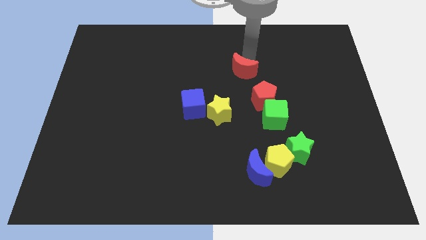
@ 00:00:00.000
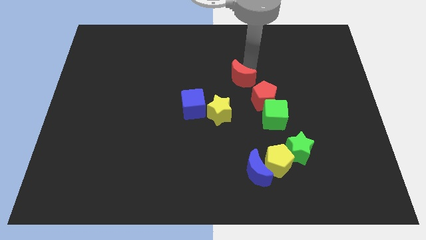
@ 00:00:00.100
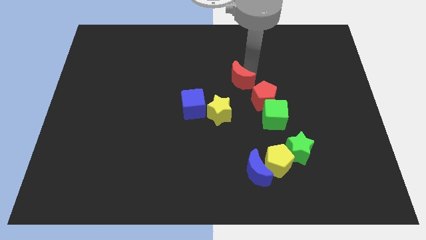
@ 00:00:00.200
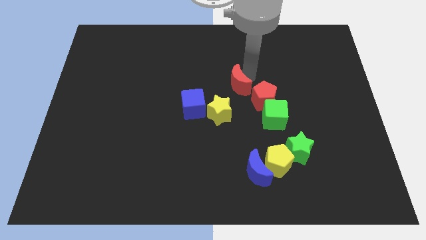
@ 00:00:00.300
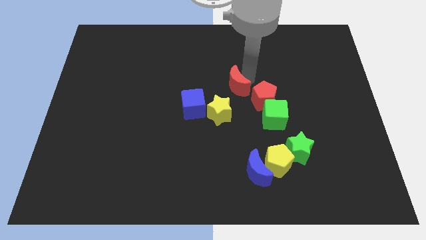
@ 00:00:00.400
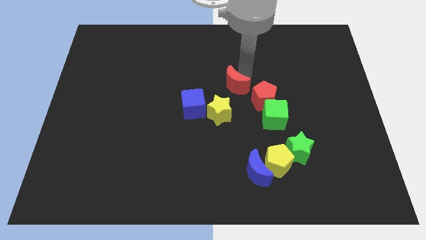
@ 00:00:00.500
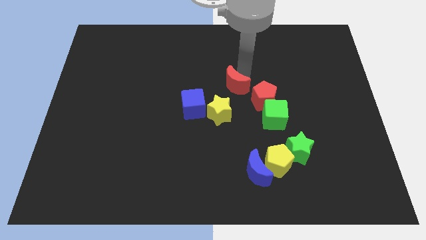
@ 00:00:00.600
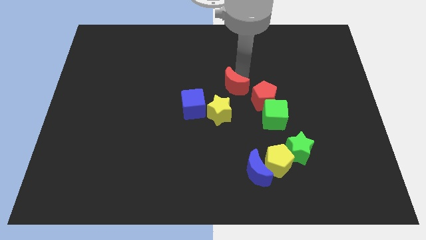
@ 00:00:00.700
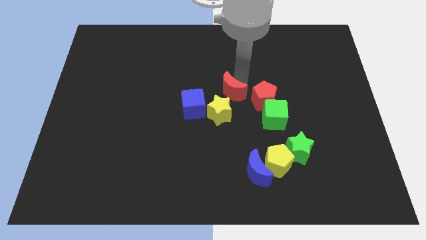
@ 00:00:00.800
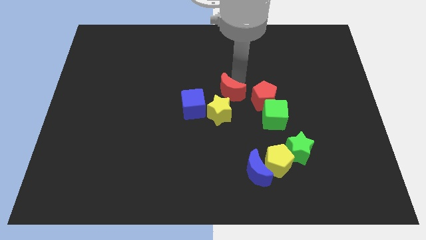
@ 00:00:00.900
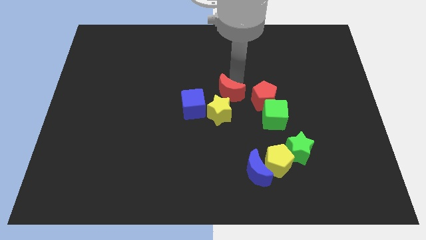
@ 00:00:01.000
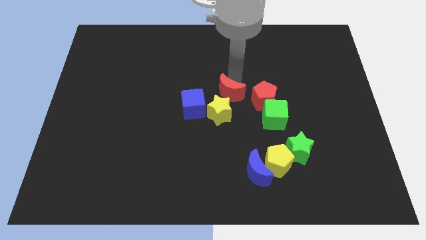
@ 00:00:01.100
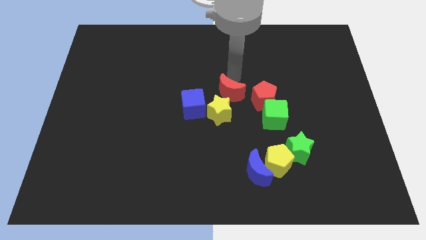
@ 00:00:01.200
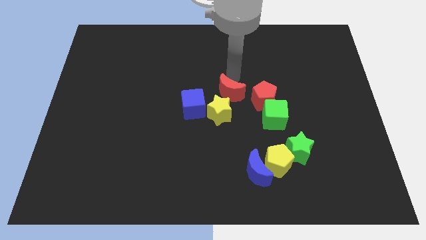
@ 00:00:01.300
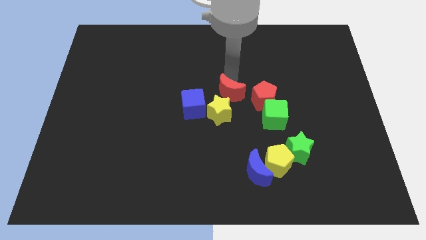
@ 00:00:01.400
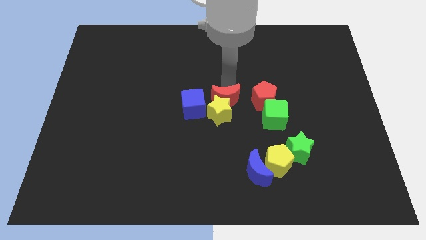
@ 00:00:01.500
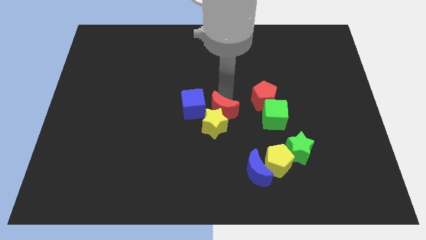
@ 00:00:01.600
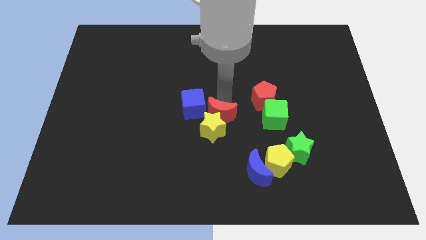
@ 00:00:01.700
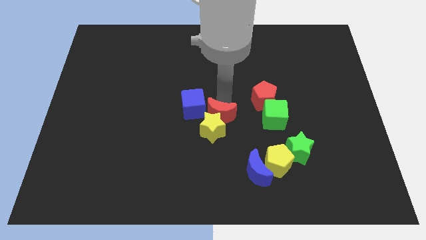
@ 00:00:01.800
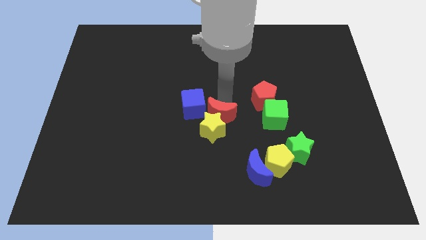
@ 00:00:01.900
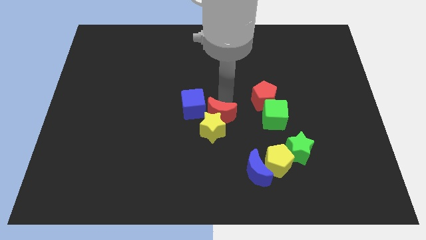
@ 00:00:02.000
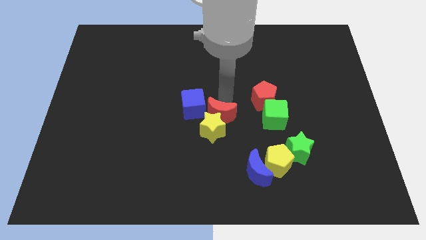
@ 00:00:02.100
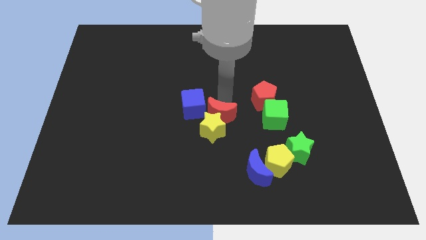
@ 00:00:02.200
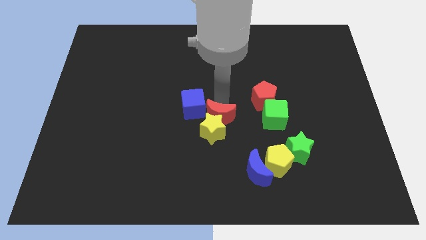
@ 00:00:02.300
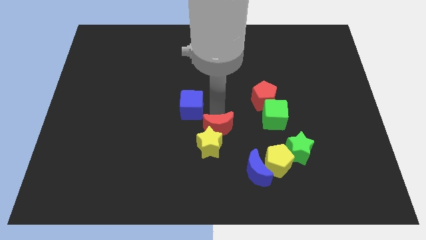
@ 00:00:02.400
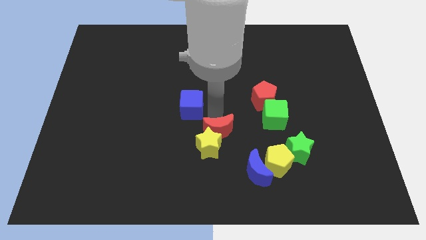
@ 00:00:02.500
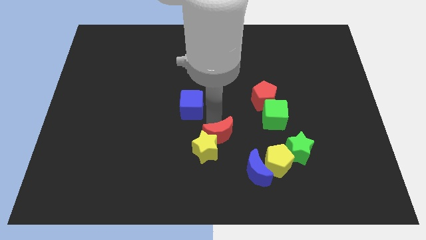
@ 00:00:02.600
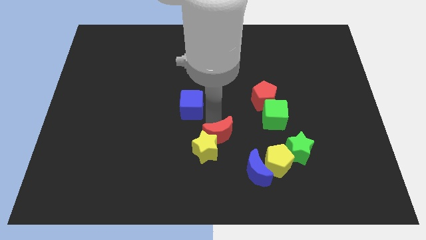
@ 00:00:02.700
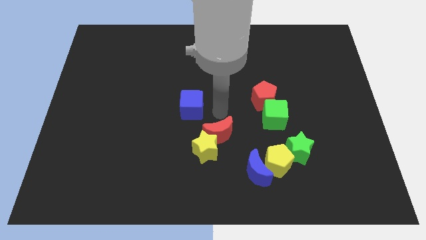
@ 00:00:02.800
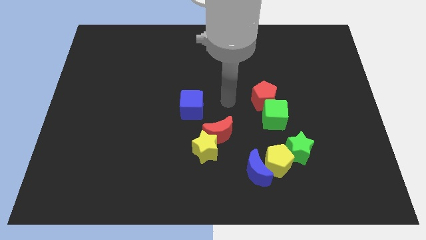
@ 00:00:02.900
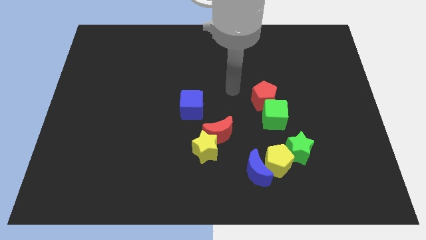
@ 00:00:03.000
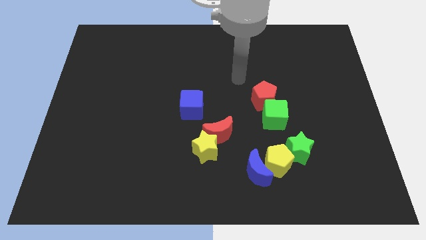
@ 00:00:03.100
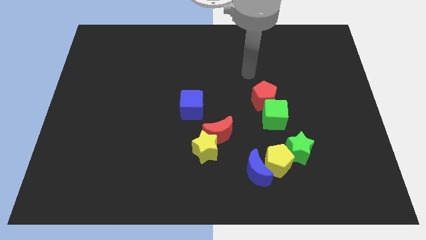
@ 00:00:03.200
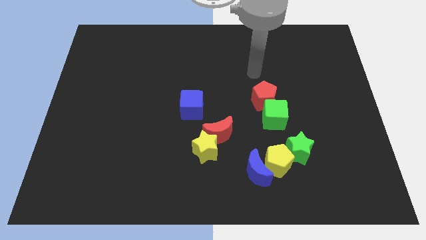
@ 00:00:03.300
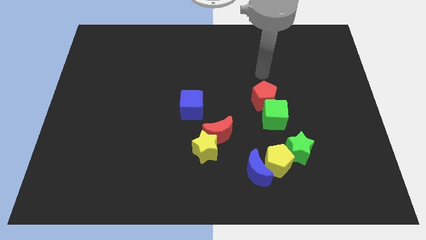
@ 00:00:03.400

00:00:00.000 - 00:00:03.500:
move yellow star slgihtly down with the help of red moon

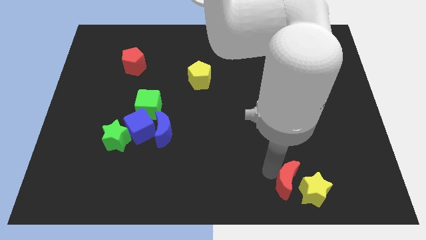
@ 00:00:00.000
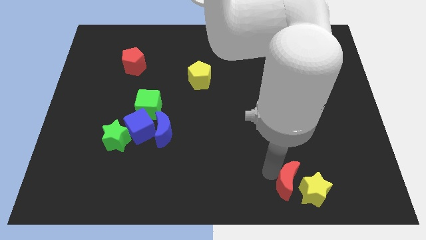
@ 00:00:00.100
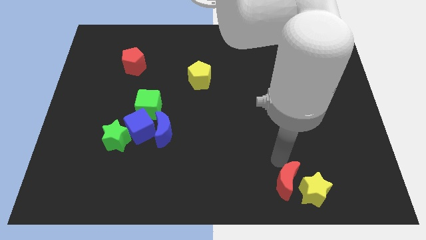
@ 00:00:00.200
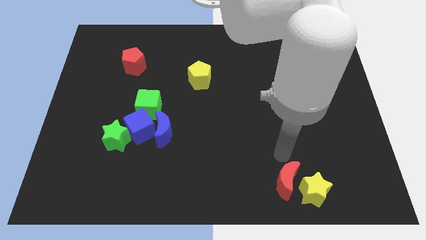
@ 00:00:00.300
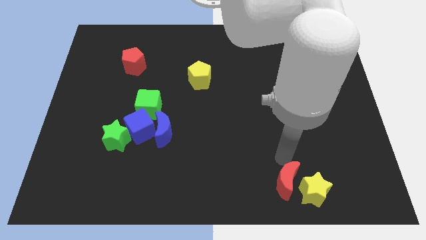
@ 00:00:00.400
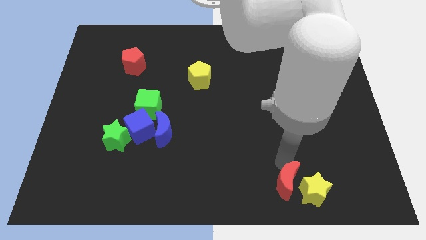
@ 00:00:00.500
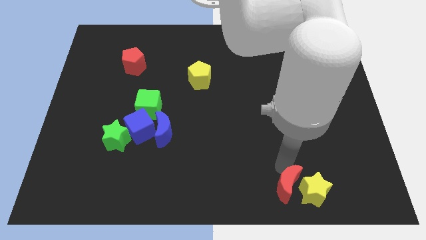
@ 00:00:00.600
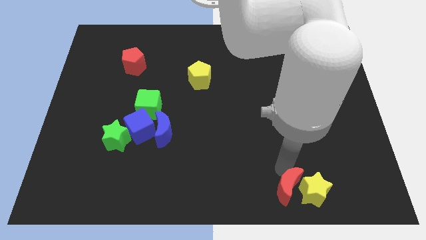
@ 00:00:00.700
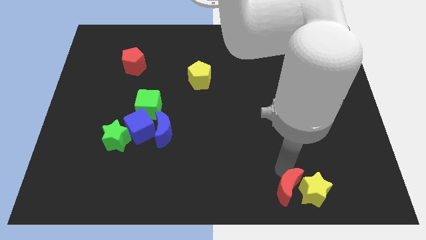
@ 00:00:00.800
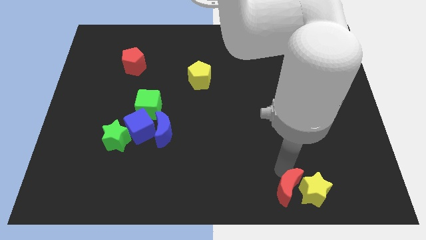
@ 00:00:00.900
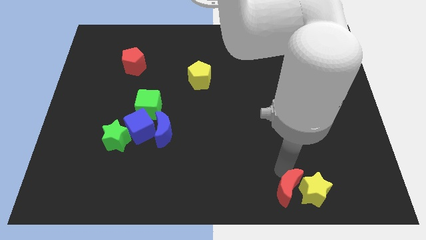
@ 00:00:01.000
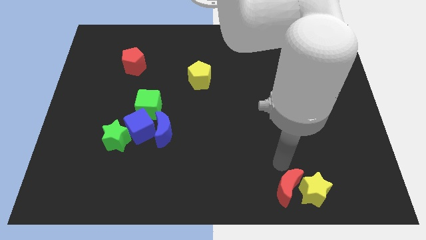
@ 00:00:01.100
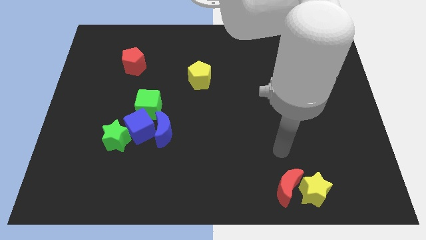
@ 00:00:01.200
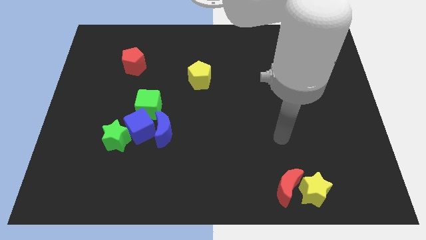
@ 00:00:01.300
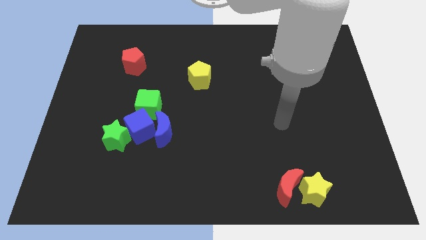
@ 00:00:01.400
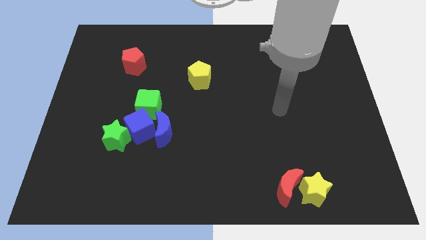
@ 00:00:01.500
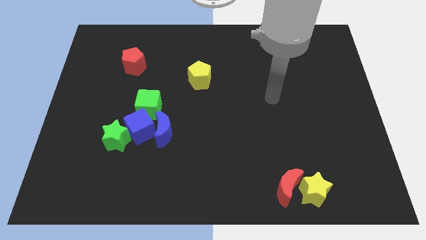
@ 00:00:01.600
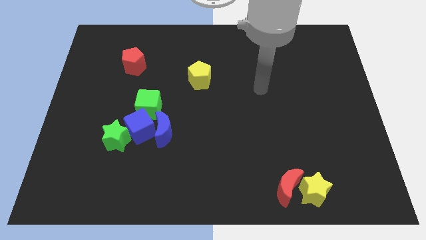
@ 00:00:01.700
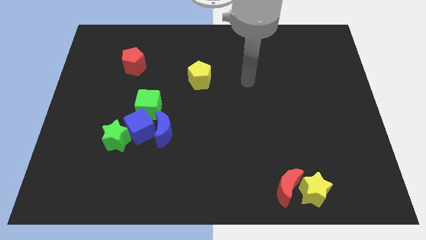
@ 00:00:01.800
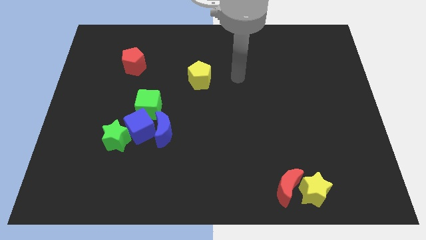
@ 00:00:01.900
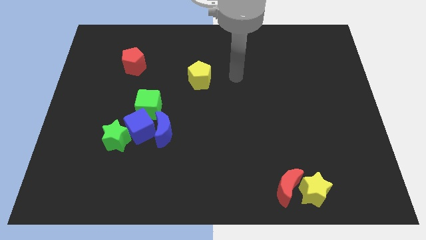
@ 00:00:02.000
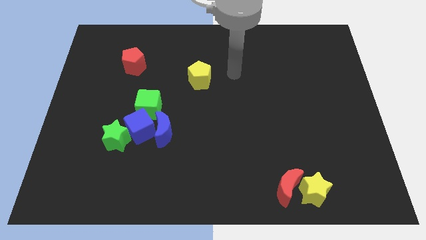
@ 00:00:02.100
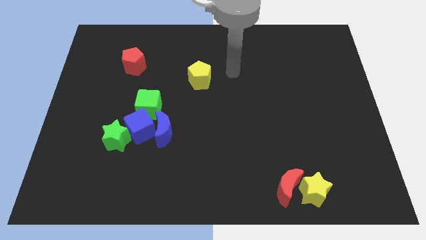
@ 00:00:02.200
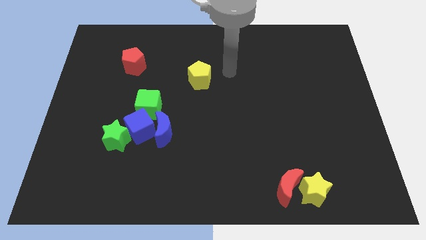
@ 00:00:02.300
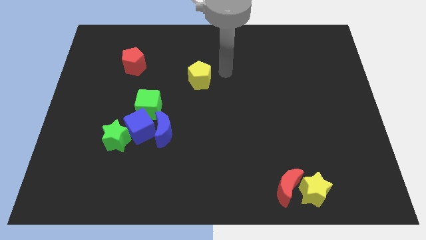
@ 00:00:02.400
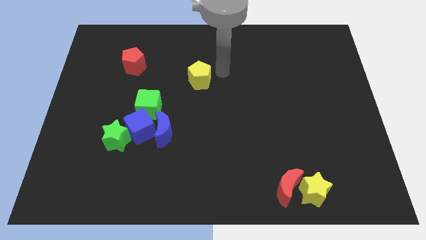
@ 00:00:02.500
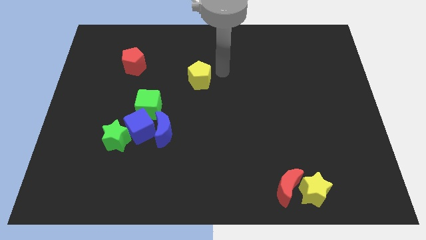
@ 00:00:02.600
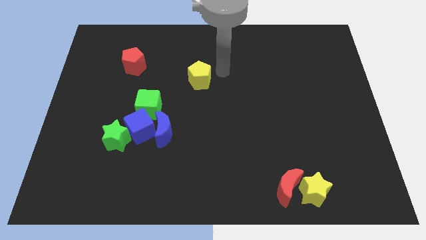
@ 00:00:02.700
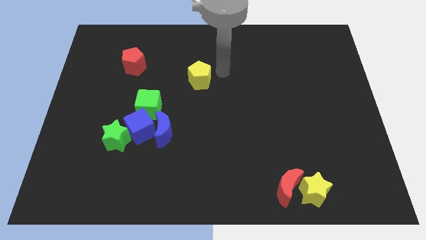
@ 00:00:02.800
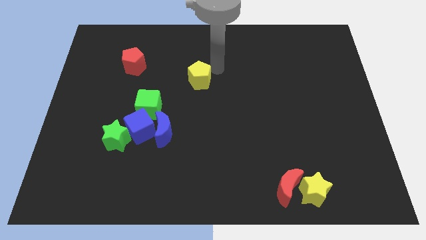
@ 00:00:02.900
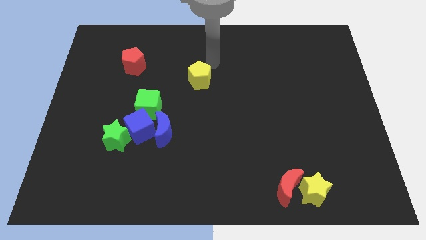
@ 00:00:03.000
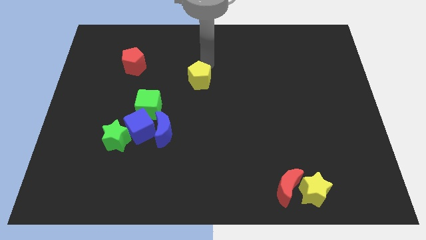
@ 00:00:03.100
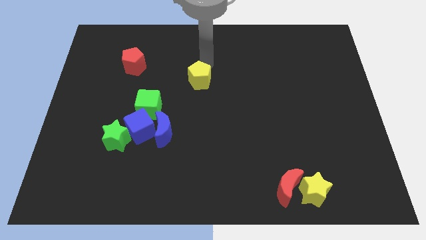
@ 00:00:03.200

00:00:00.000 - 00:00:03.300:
place your arm on the top of yellow pentagon

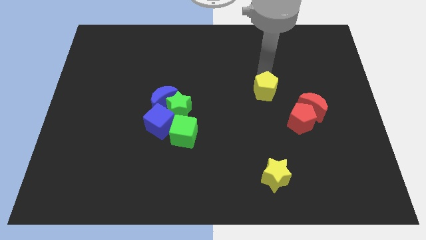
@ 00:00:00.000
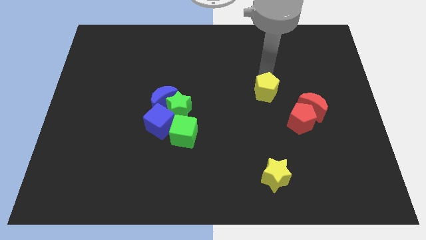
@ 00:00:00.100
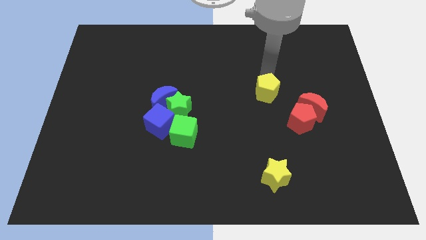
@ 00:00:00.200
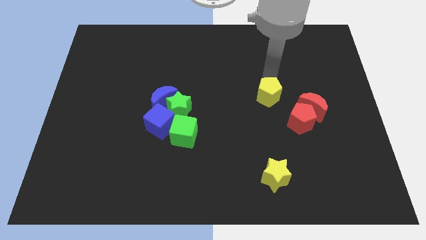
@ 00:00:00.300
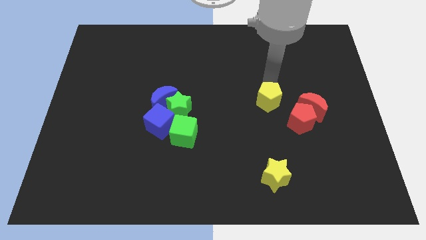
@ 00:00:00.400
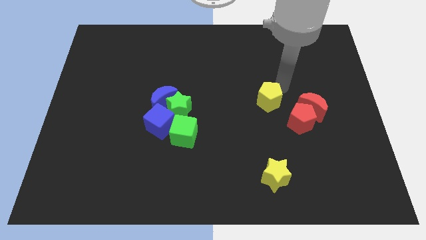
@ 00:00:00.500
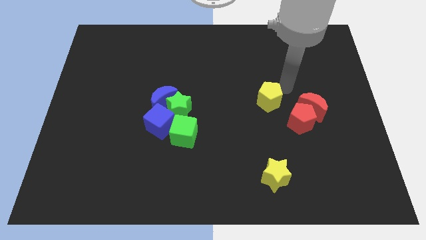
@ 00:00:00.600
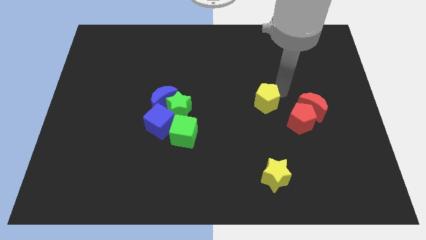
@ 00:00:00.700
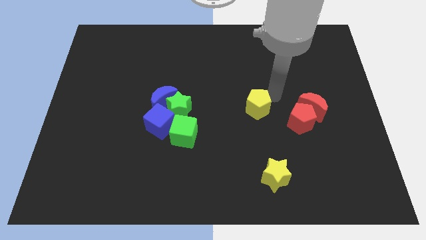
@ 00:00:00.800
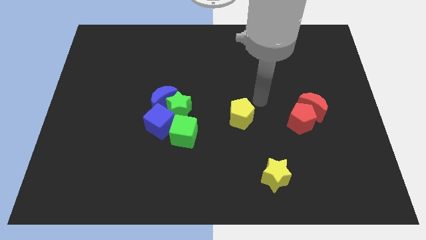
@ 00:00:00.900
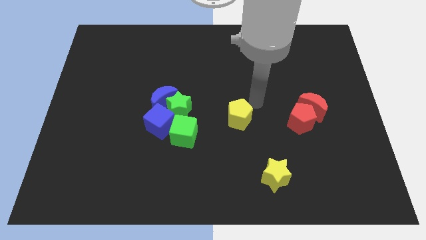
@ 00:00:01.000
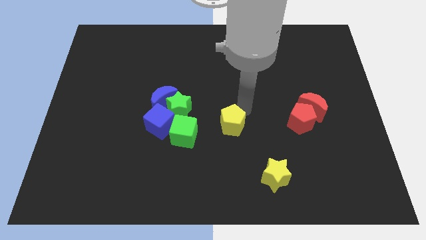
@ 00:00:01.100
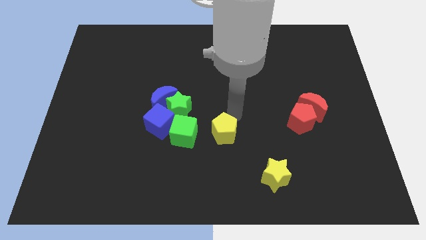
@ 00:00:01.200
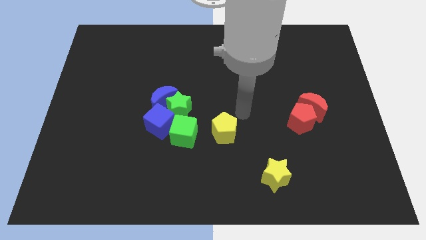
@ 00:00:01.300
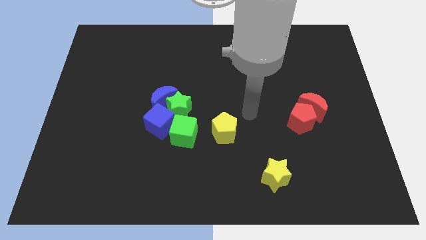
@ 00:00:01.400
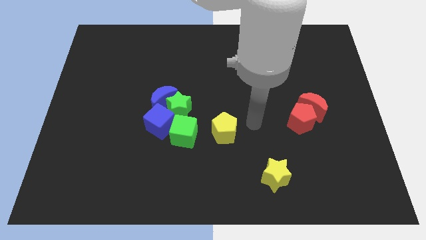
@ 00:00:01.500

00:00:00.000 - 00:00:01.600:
place the yellow pentagon diagonally in between both the stars

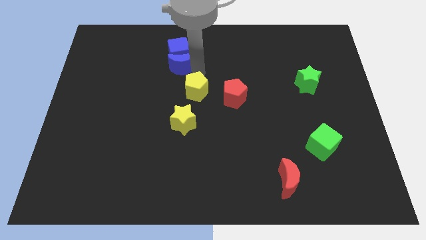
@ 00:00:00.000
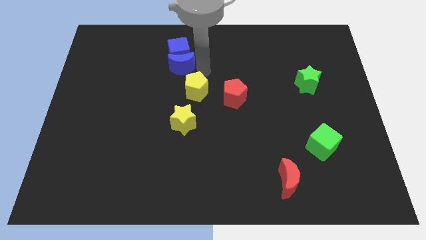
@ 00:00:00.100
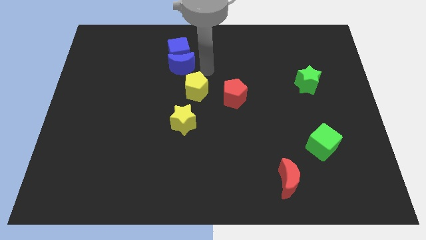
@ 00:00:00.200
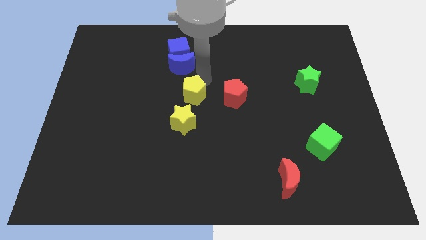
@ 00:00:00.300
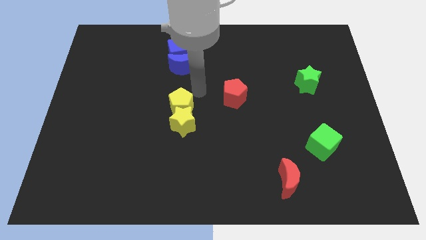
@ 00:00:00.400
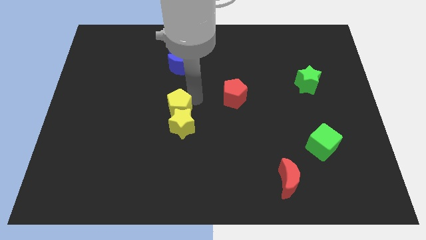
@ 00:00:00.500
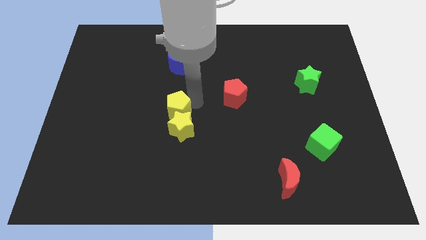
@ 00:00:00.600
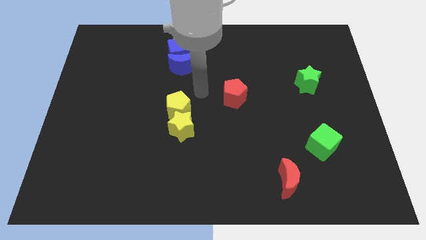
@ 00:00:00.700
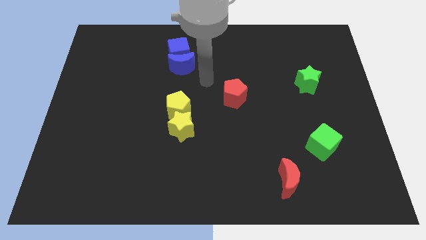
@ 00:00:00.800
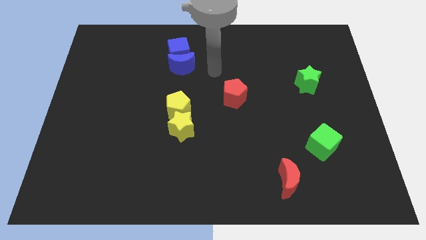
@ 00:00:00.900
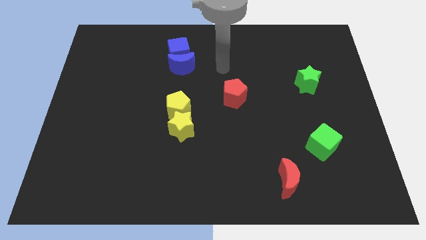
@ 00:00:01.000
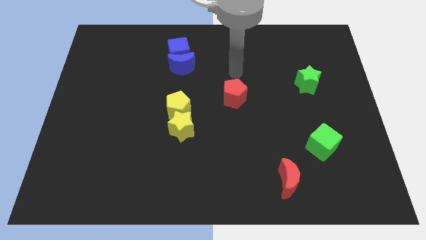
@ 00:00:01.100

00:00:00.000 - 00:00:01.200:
move the yellow blocks slightly to the bottom of the board
